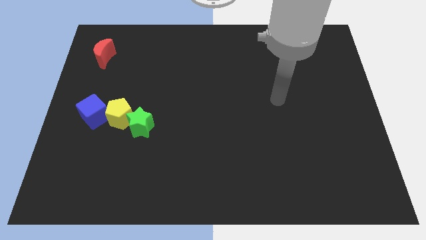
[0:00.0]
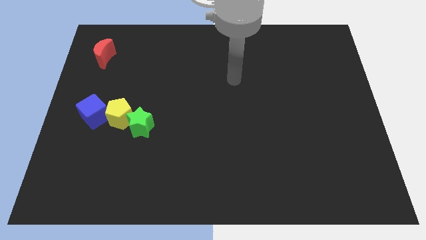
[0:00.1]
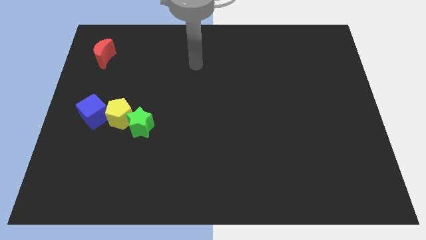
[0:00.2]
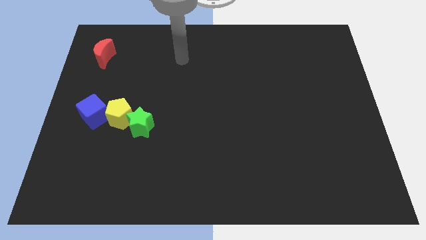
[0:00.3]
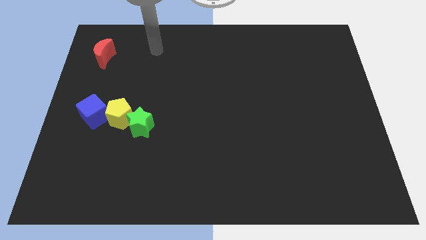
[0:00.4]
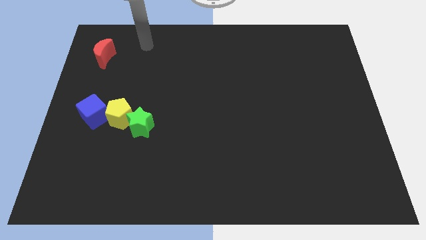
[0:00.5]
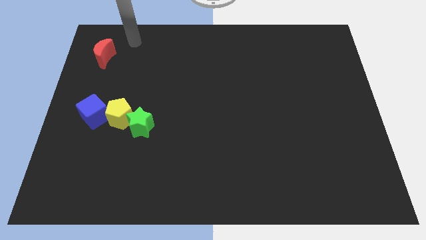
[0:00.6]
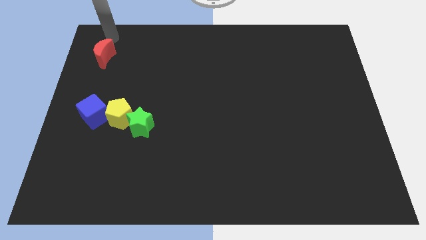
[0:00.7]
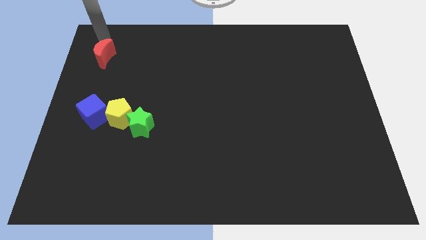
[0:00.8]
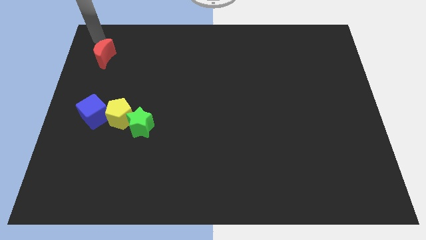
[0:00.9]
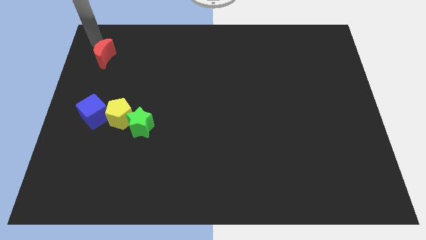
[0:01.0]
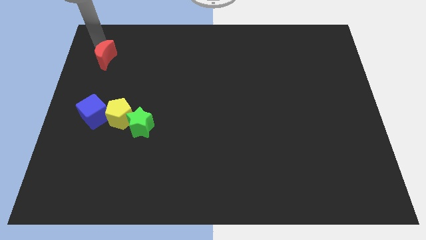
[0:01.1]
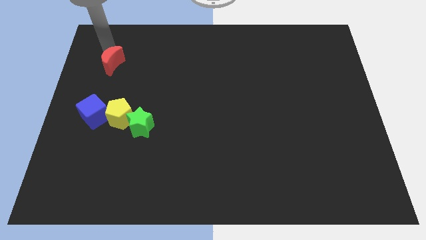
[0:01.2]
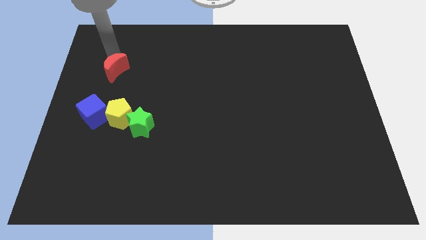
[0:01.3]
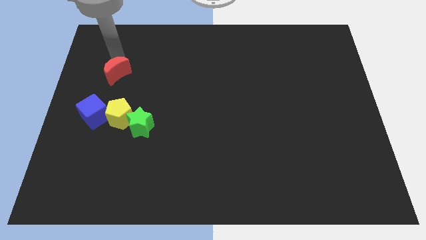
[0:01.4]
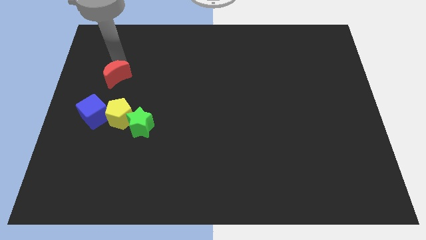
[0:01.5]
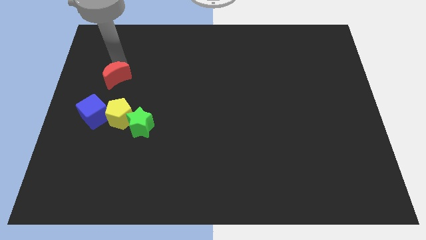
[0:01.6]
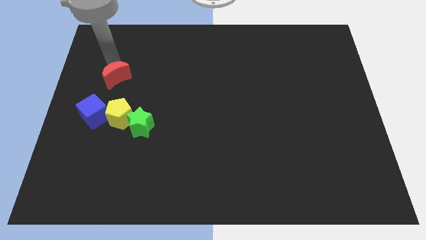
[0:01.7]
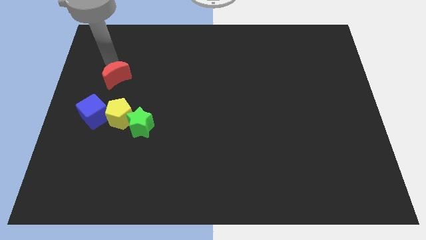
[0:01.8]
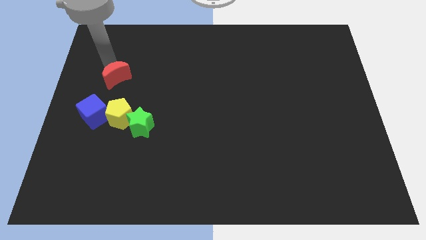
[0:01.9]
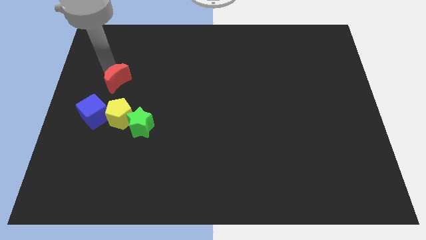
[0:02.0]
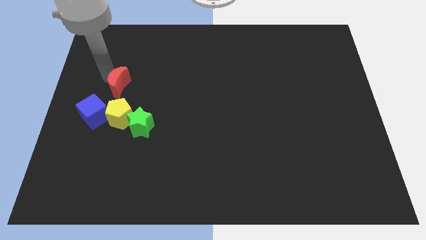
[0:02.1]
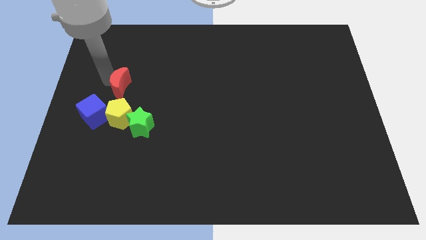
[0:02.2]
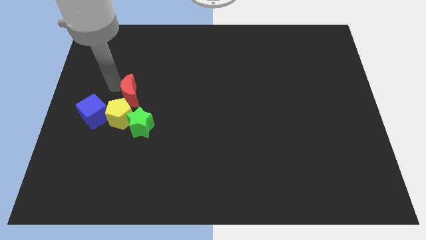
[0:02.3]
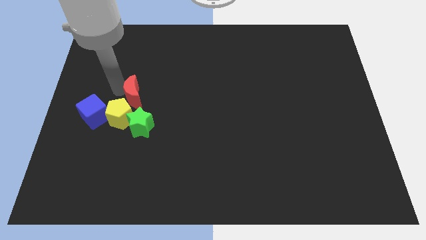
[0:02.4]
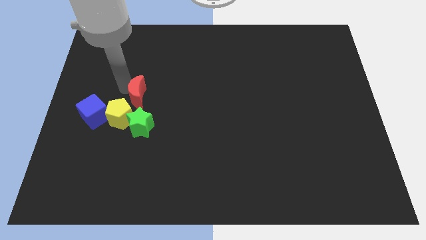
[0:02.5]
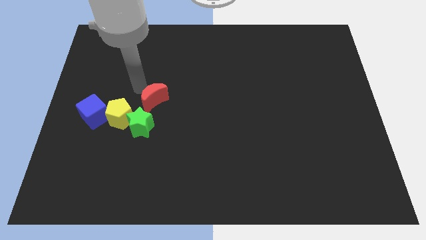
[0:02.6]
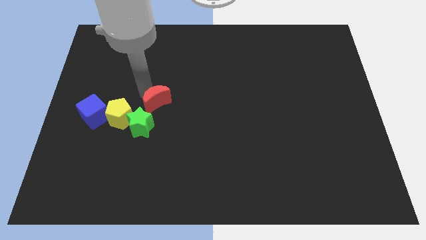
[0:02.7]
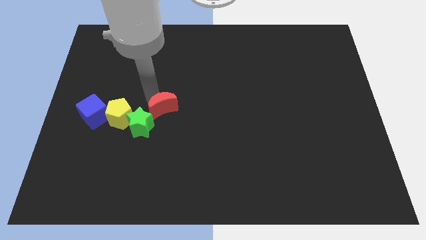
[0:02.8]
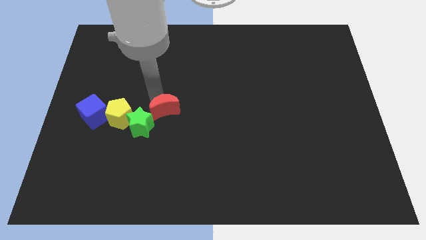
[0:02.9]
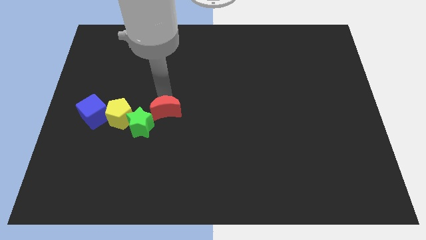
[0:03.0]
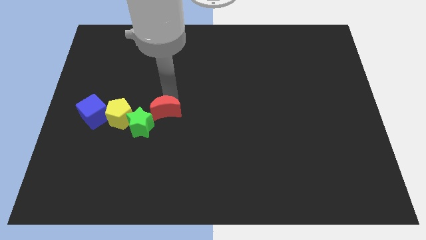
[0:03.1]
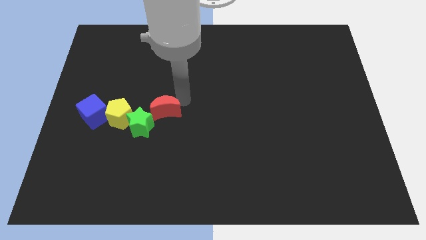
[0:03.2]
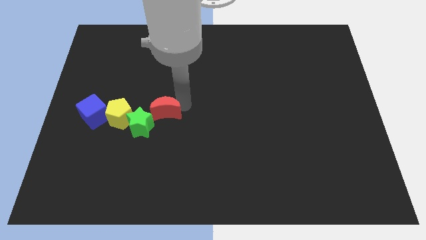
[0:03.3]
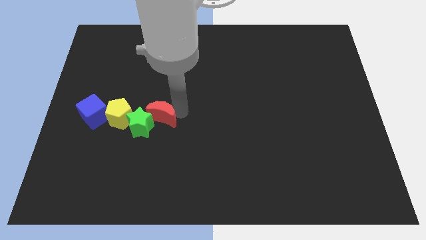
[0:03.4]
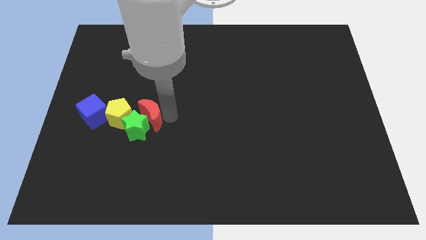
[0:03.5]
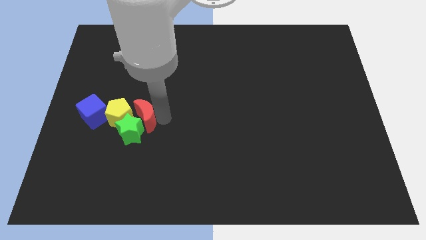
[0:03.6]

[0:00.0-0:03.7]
push the moon next to the green star

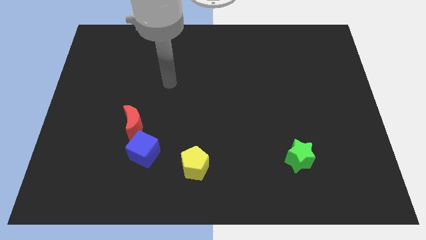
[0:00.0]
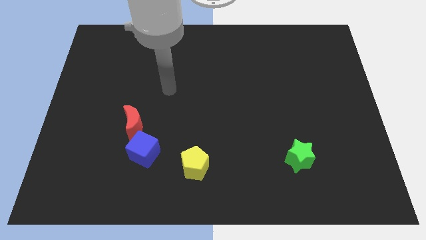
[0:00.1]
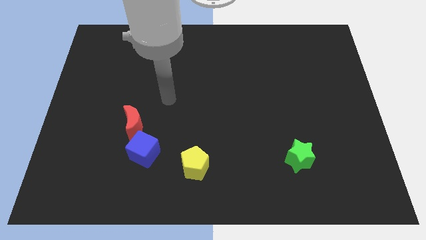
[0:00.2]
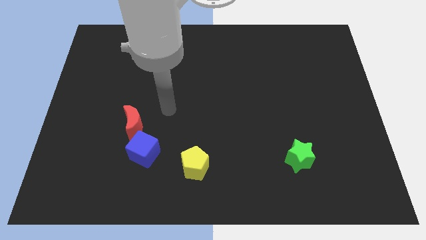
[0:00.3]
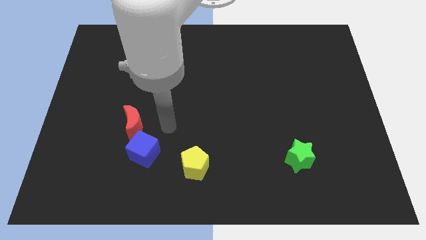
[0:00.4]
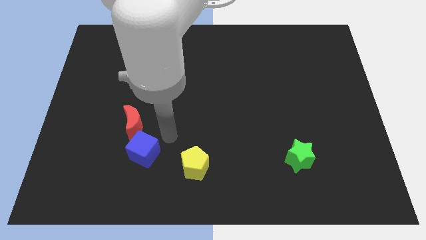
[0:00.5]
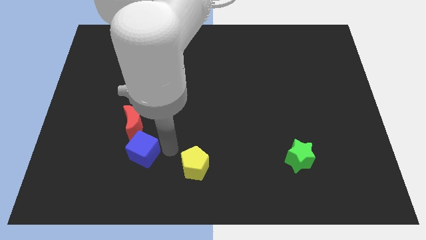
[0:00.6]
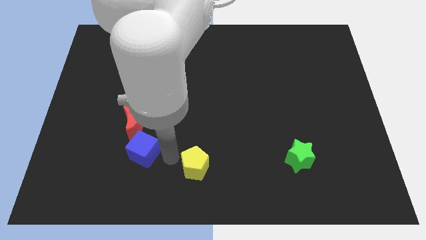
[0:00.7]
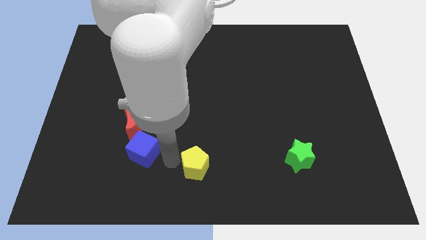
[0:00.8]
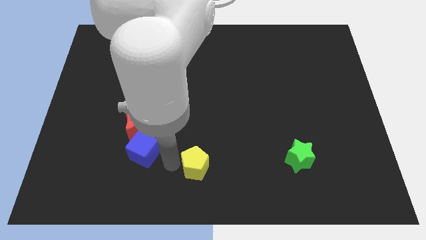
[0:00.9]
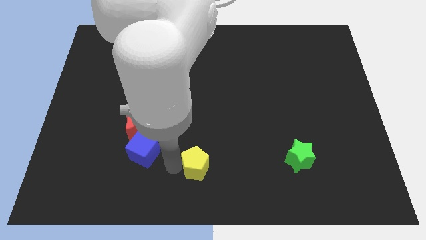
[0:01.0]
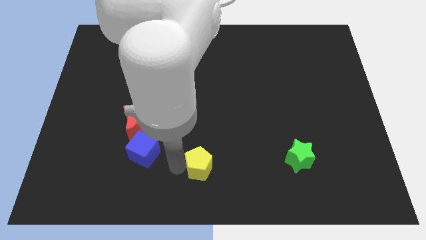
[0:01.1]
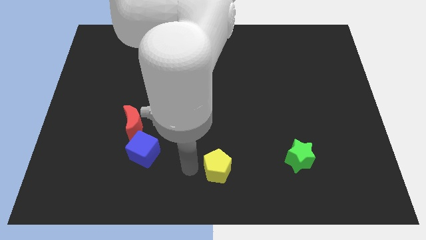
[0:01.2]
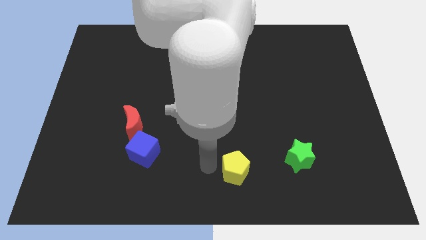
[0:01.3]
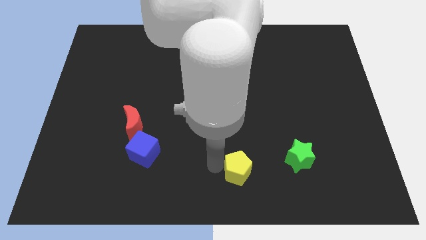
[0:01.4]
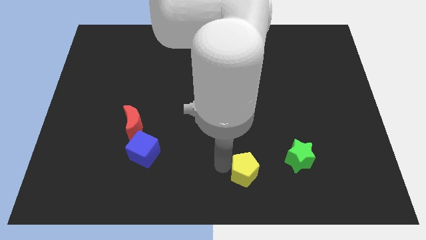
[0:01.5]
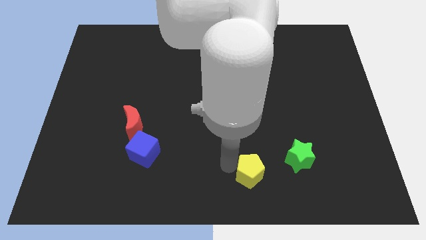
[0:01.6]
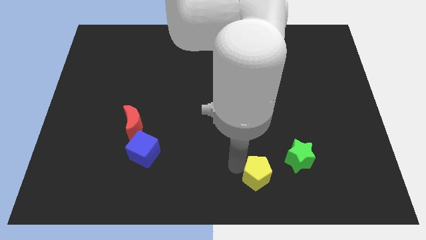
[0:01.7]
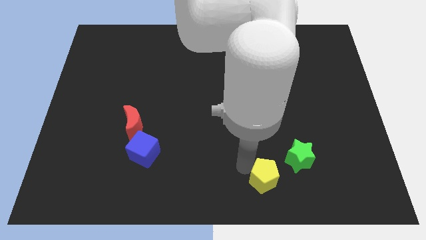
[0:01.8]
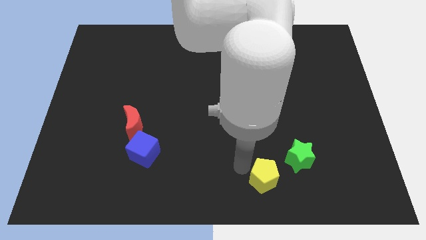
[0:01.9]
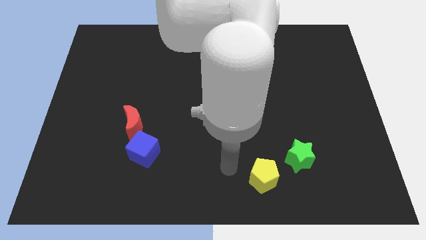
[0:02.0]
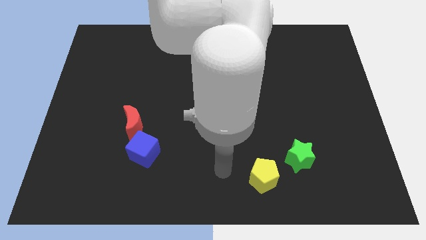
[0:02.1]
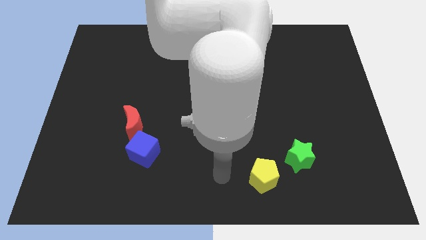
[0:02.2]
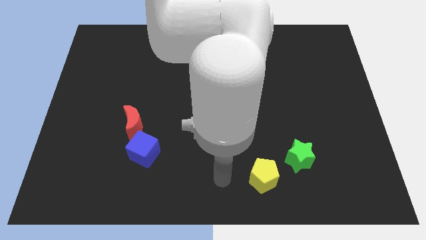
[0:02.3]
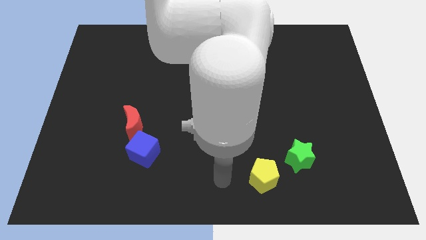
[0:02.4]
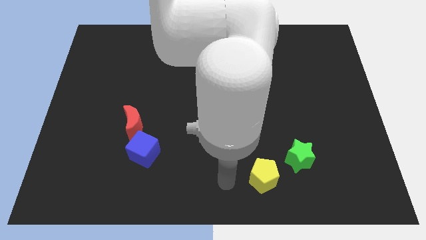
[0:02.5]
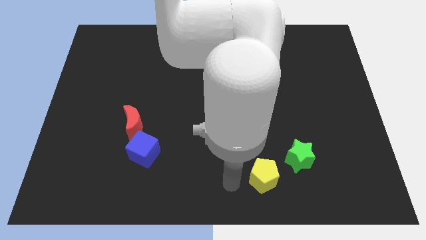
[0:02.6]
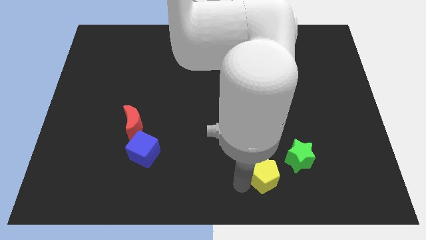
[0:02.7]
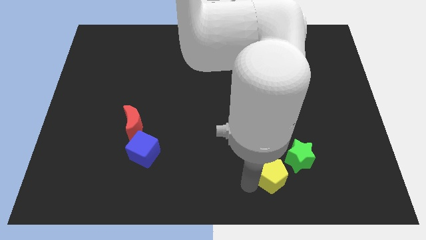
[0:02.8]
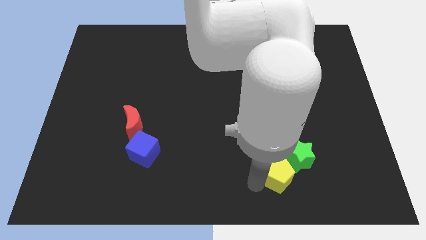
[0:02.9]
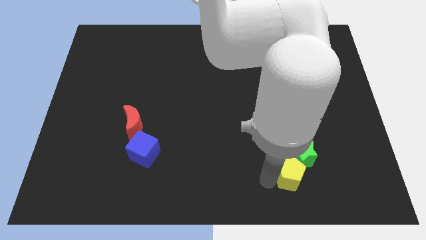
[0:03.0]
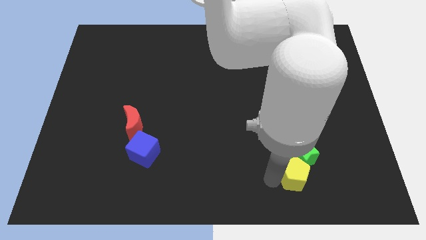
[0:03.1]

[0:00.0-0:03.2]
put the yellow block to the green star

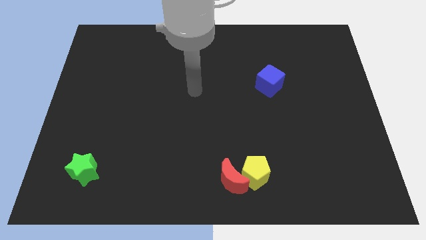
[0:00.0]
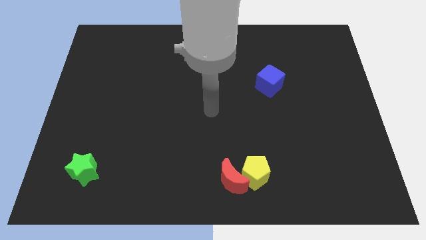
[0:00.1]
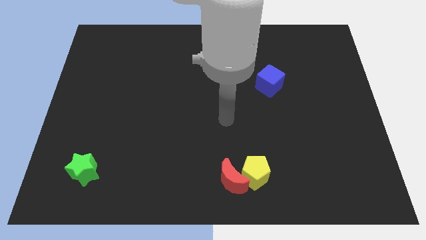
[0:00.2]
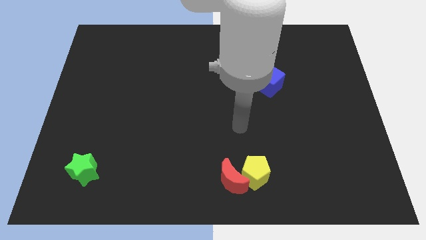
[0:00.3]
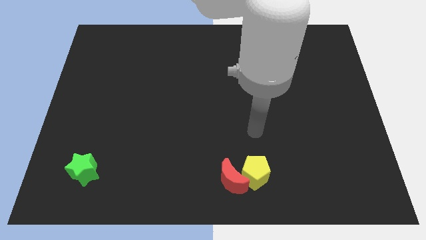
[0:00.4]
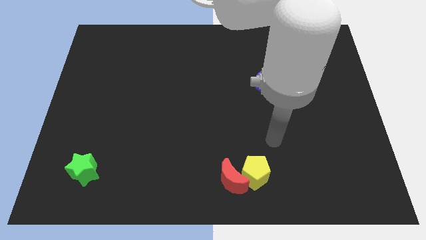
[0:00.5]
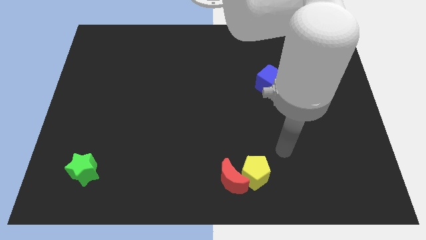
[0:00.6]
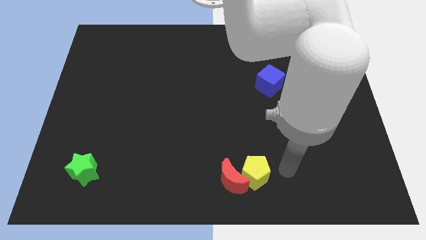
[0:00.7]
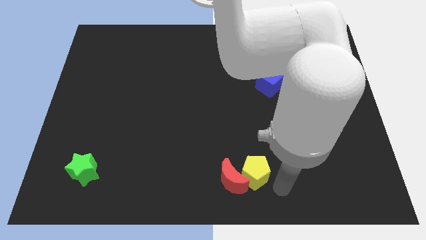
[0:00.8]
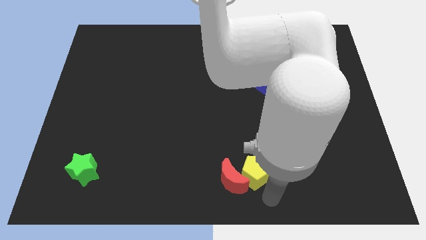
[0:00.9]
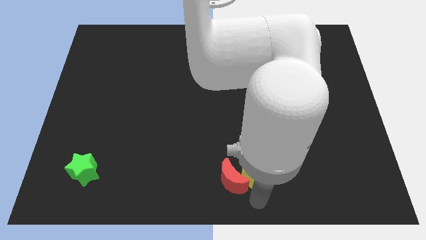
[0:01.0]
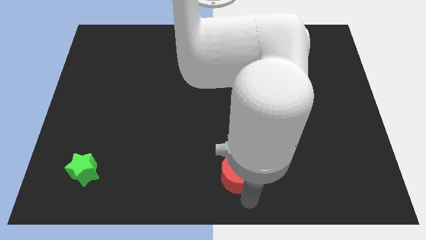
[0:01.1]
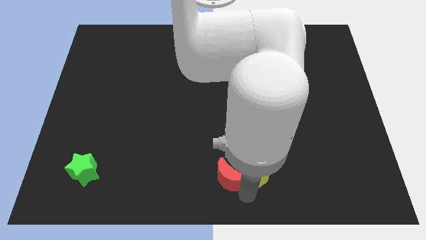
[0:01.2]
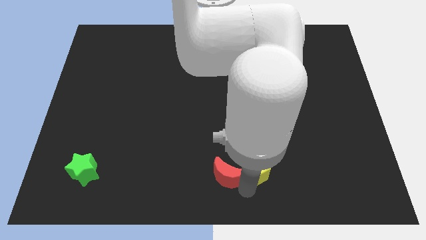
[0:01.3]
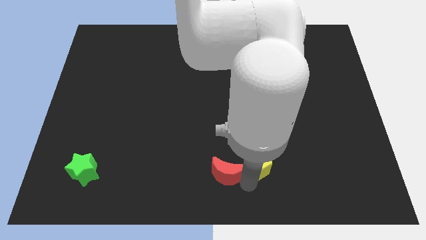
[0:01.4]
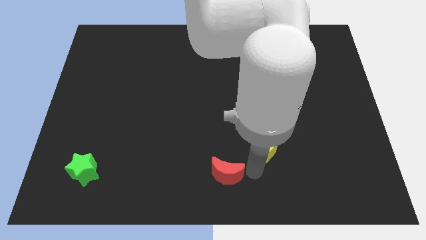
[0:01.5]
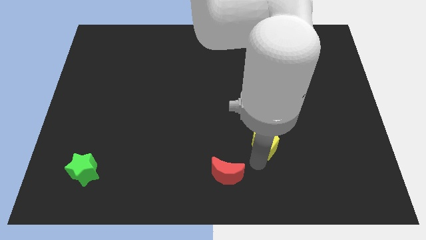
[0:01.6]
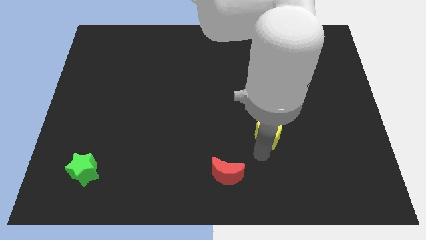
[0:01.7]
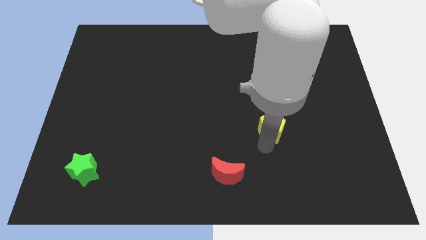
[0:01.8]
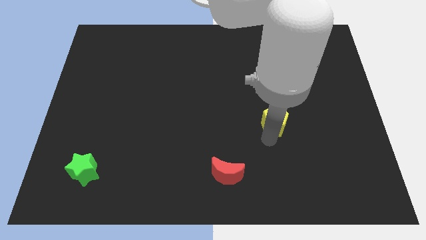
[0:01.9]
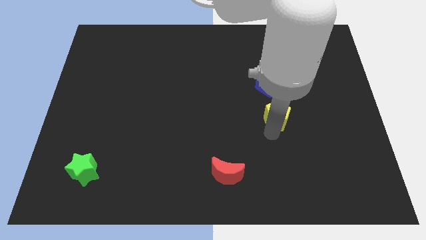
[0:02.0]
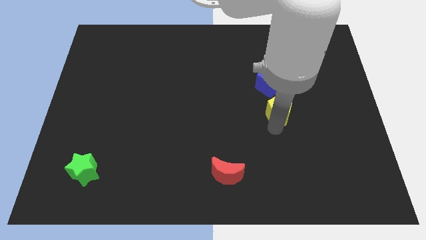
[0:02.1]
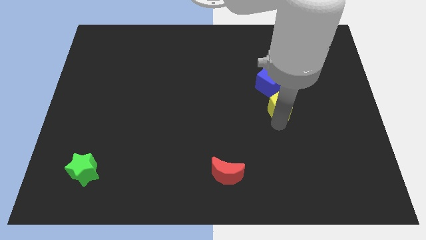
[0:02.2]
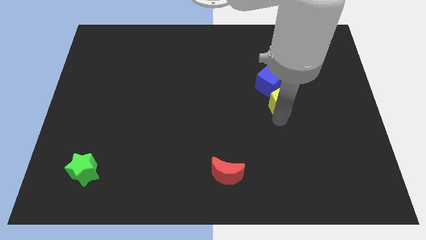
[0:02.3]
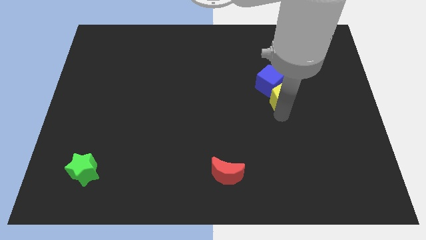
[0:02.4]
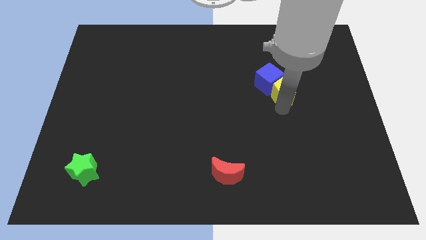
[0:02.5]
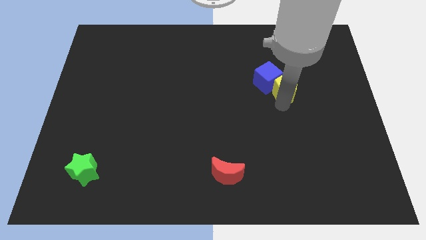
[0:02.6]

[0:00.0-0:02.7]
move the yellow block towards the blue block
